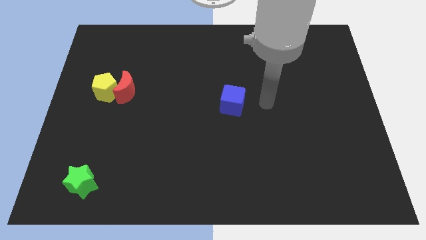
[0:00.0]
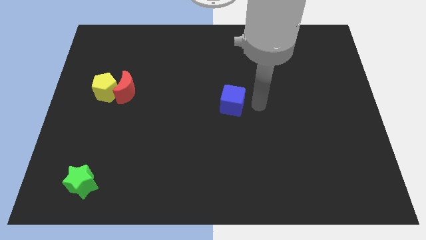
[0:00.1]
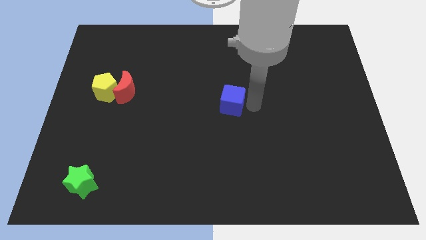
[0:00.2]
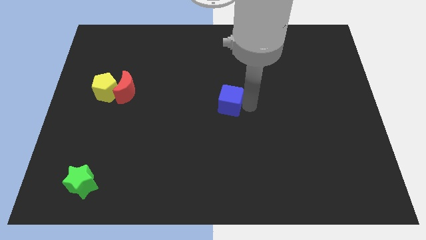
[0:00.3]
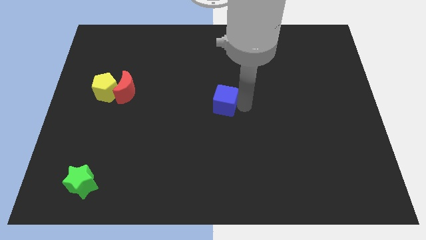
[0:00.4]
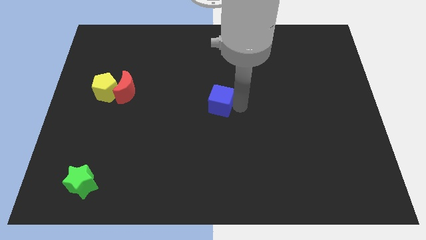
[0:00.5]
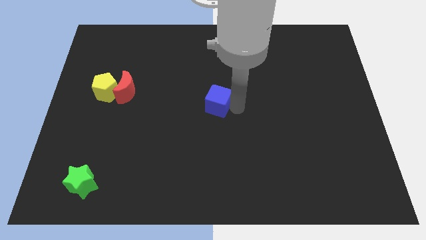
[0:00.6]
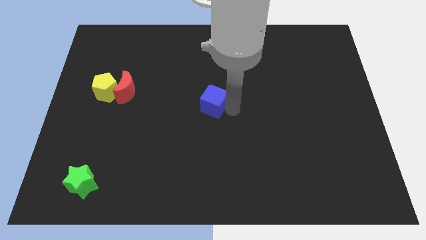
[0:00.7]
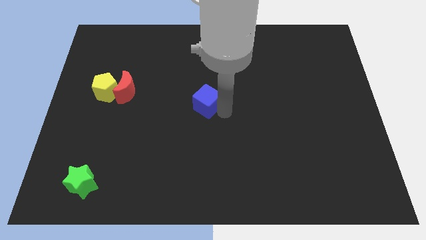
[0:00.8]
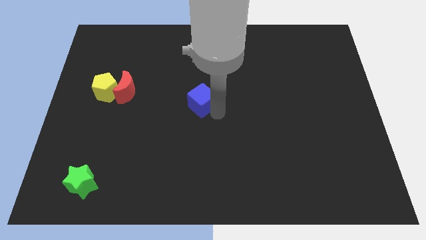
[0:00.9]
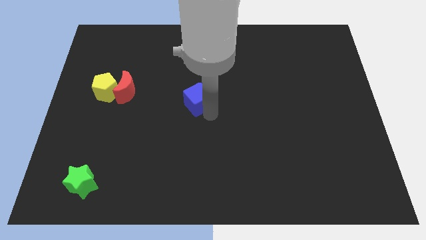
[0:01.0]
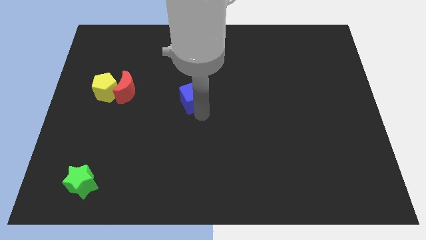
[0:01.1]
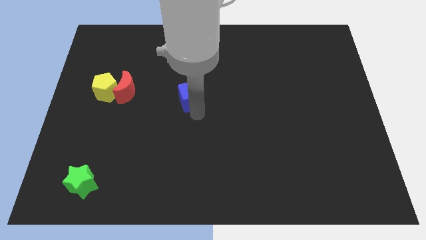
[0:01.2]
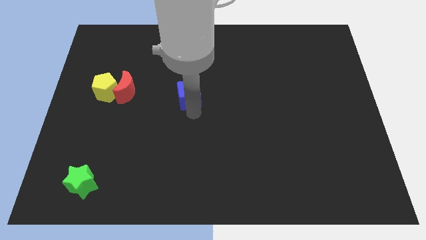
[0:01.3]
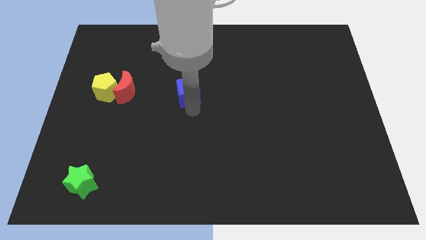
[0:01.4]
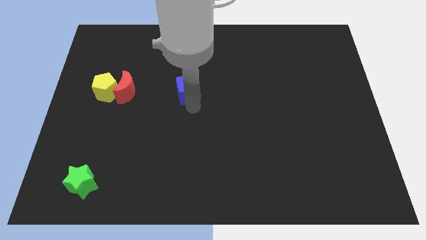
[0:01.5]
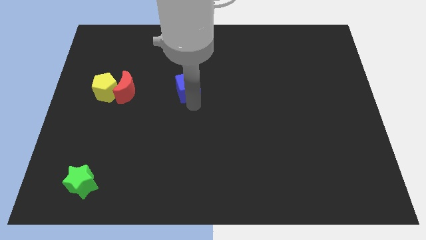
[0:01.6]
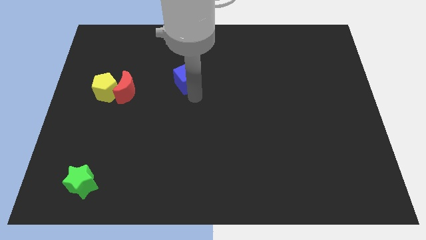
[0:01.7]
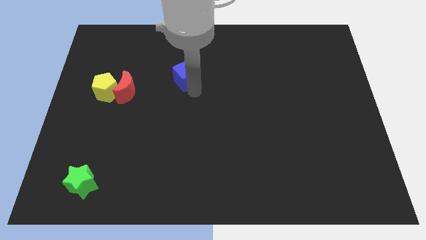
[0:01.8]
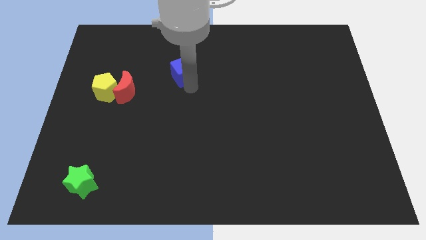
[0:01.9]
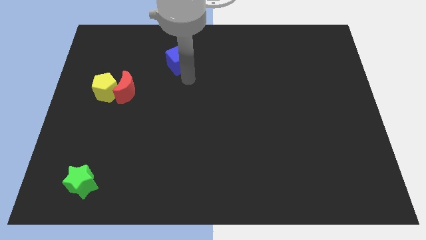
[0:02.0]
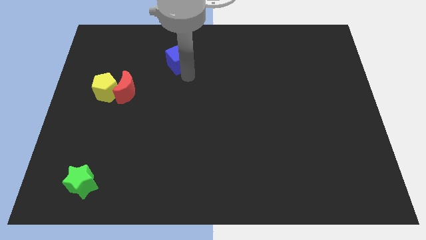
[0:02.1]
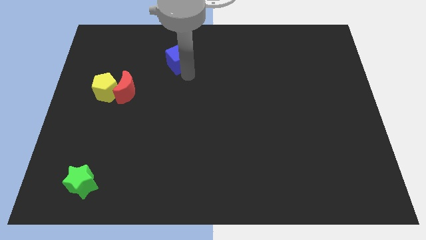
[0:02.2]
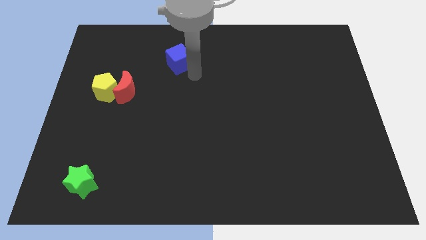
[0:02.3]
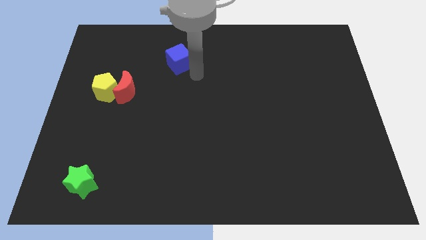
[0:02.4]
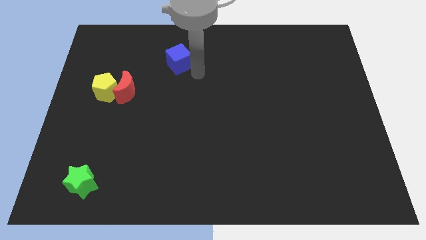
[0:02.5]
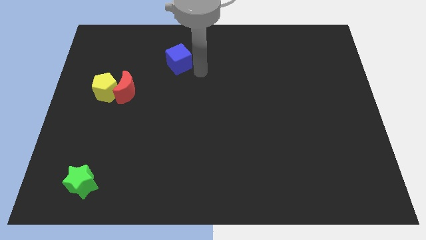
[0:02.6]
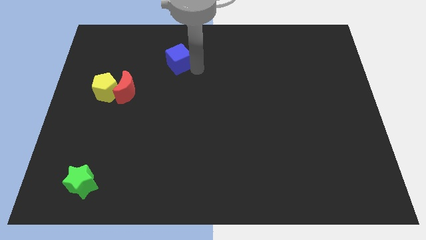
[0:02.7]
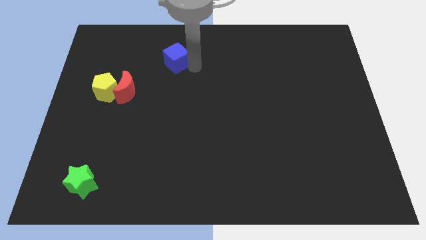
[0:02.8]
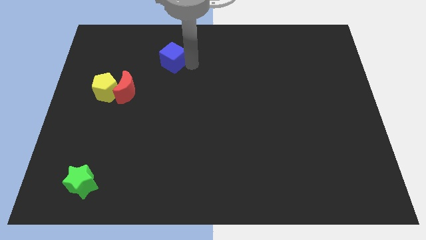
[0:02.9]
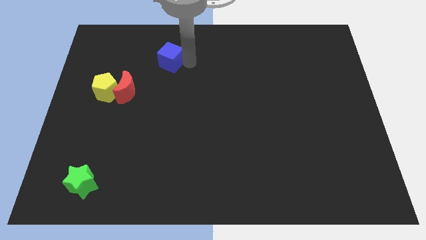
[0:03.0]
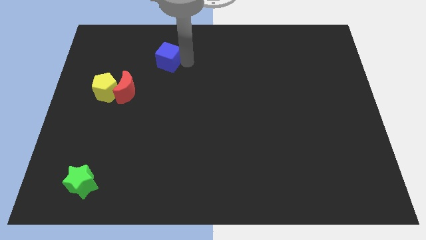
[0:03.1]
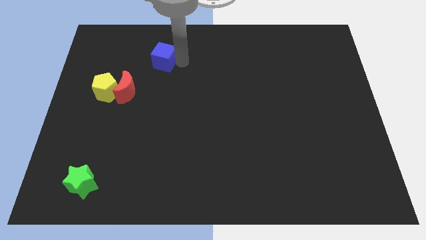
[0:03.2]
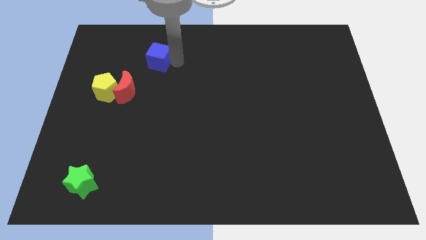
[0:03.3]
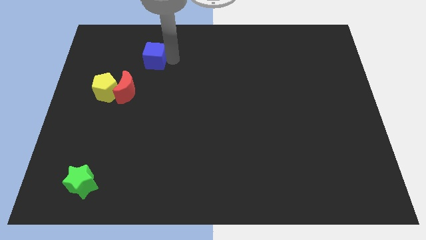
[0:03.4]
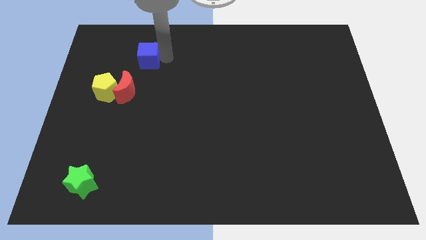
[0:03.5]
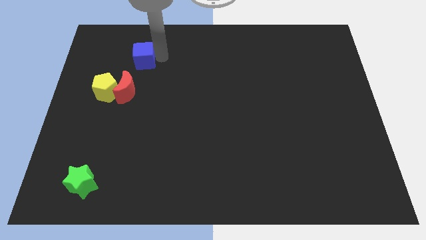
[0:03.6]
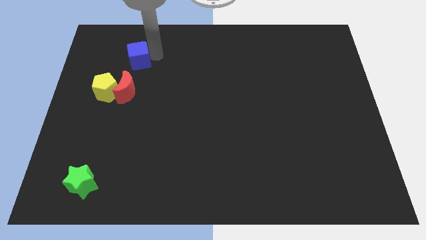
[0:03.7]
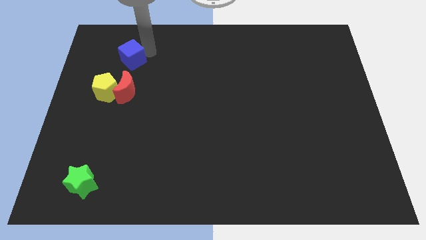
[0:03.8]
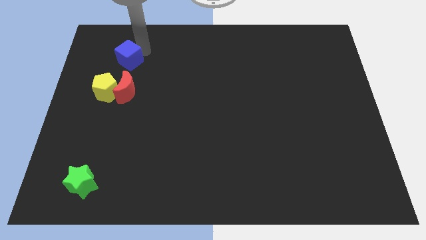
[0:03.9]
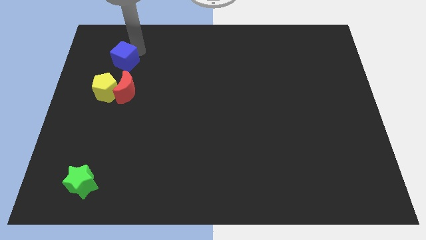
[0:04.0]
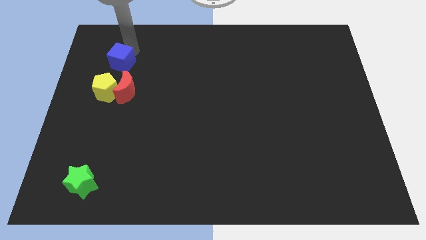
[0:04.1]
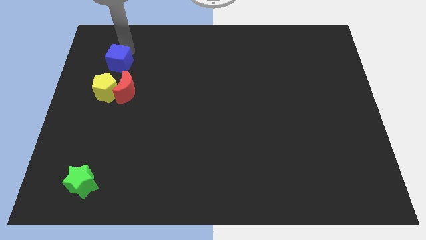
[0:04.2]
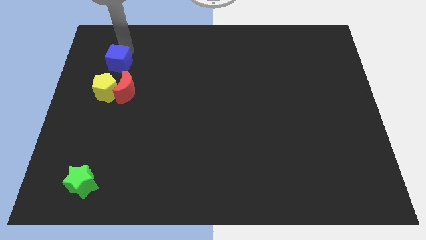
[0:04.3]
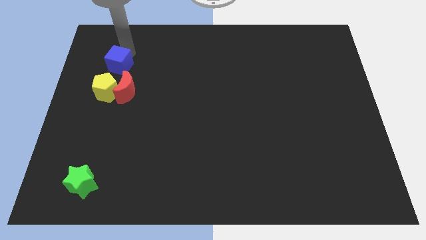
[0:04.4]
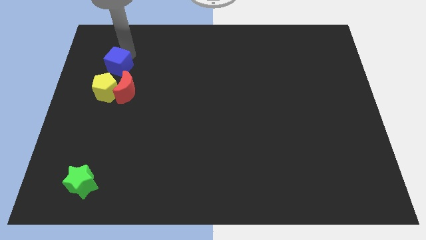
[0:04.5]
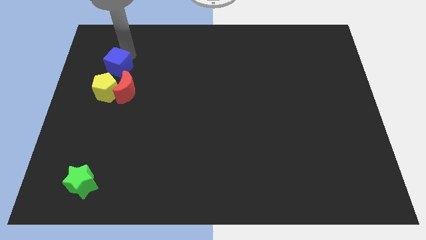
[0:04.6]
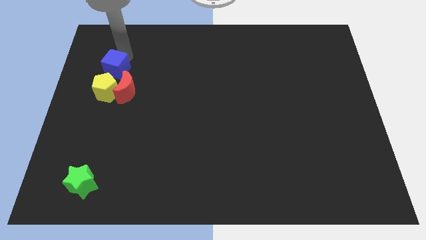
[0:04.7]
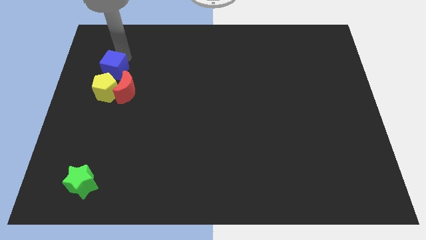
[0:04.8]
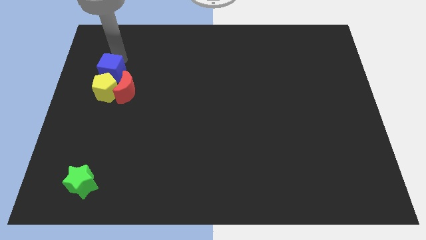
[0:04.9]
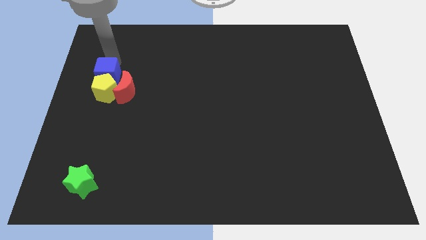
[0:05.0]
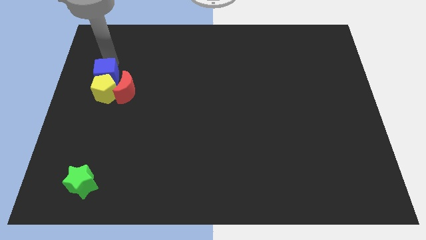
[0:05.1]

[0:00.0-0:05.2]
push the cube close to the yellow pentagon

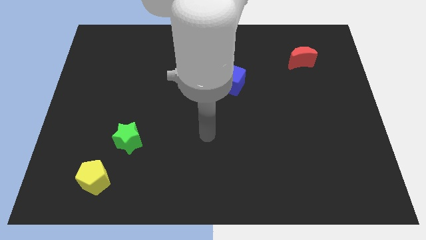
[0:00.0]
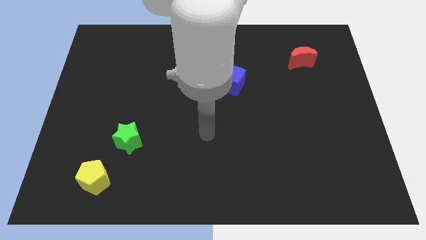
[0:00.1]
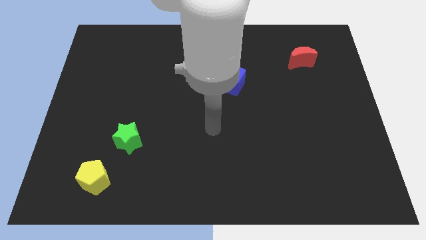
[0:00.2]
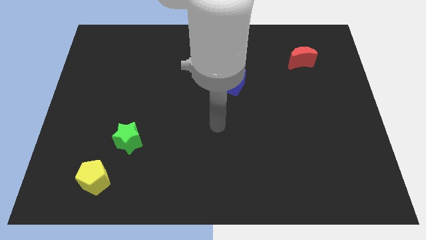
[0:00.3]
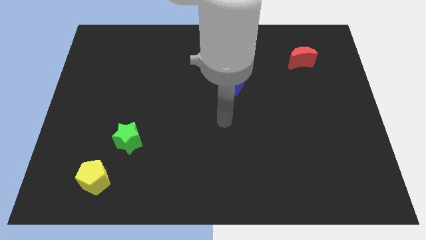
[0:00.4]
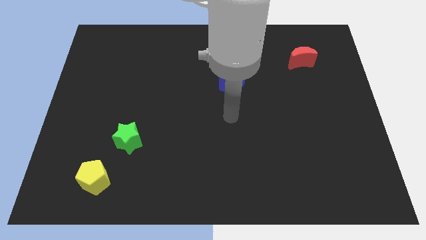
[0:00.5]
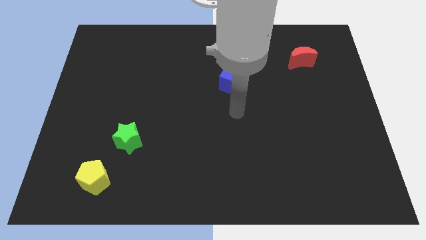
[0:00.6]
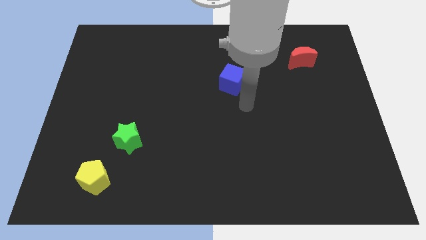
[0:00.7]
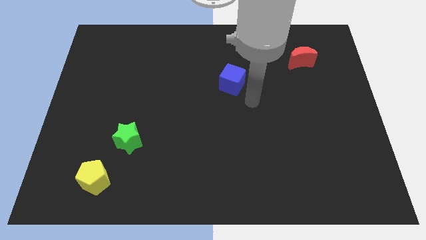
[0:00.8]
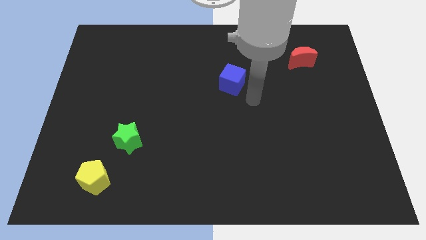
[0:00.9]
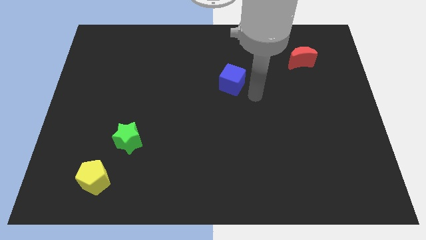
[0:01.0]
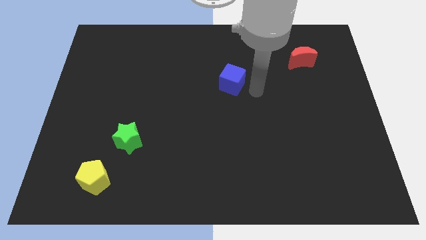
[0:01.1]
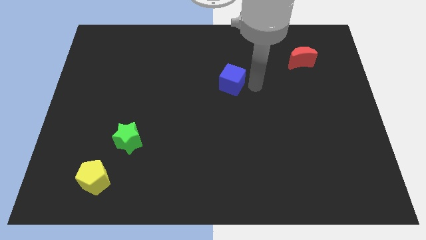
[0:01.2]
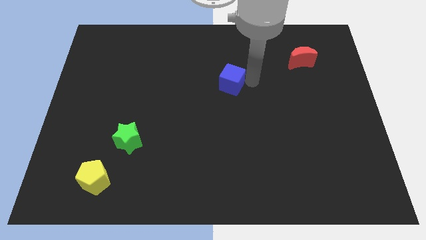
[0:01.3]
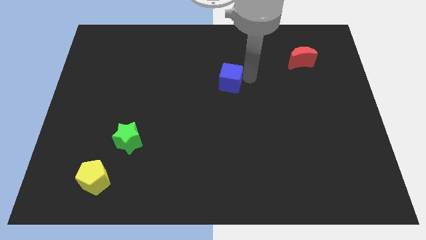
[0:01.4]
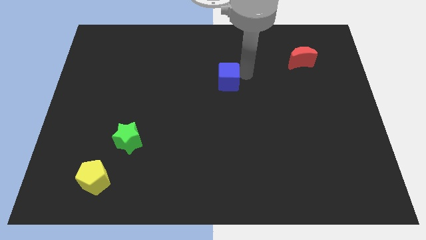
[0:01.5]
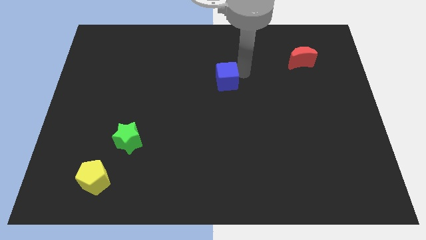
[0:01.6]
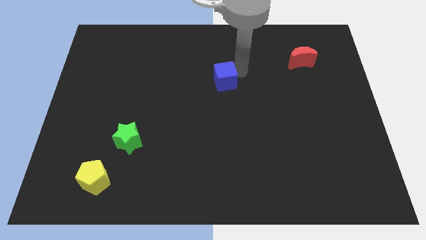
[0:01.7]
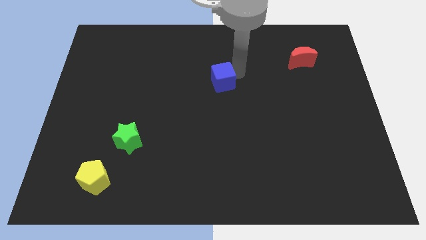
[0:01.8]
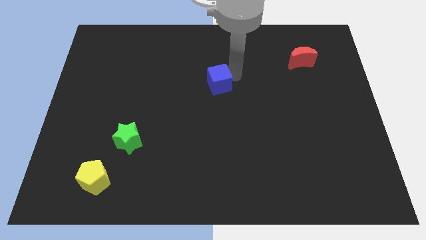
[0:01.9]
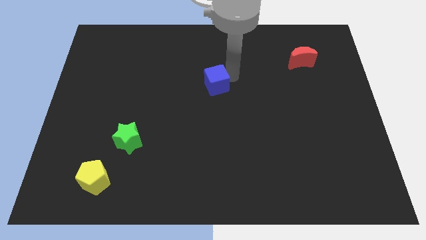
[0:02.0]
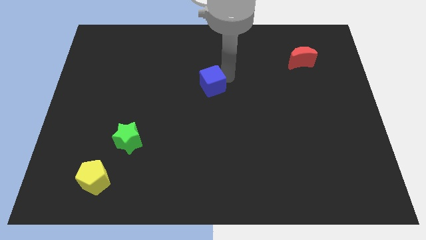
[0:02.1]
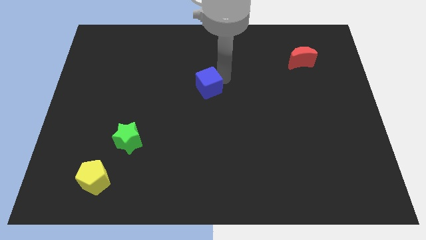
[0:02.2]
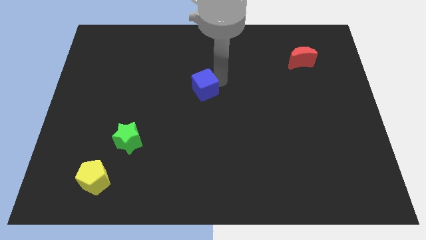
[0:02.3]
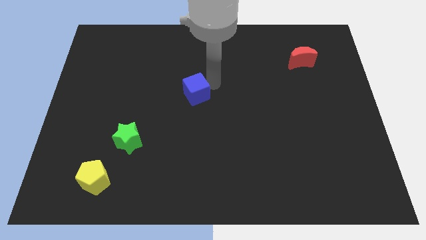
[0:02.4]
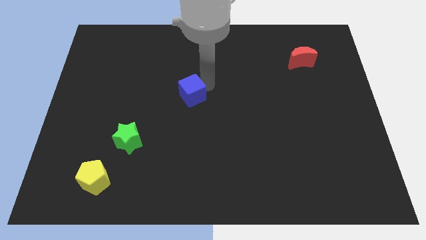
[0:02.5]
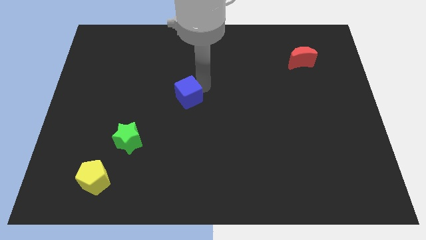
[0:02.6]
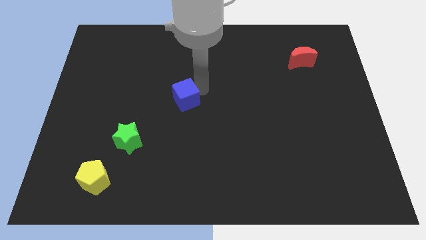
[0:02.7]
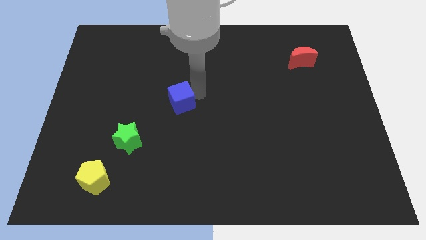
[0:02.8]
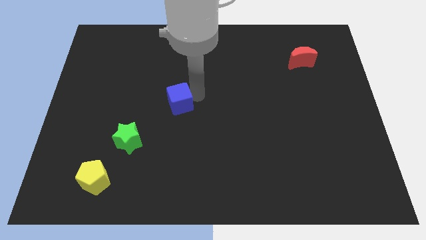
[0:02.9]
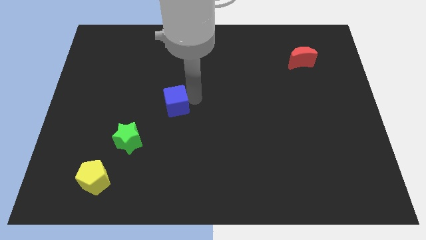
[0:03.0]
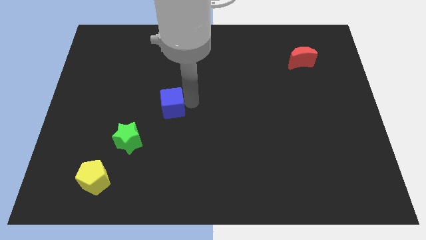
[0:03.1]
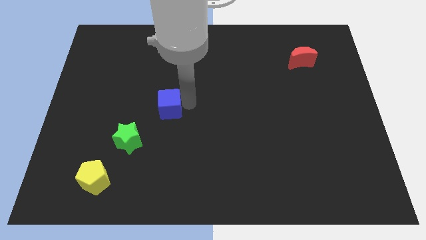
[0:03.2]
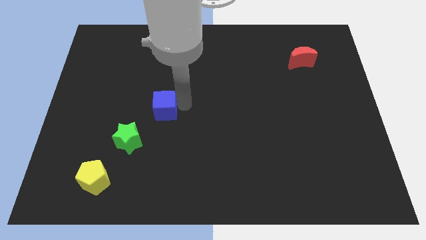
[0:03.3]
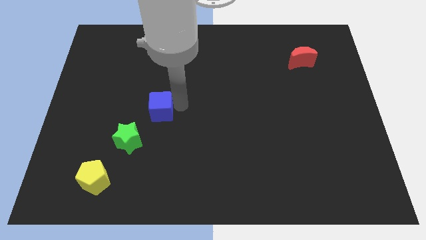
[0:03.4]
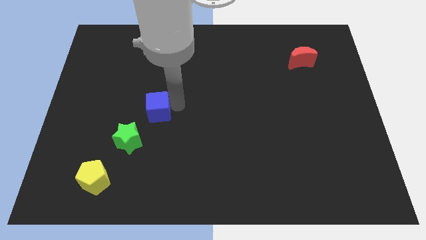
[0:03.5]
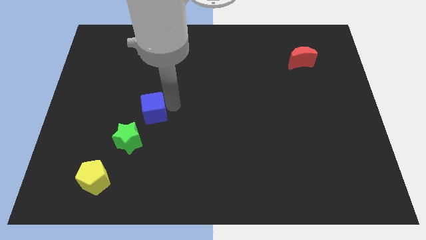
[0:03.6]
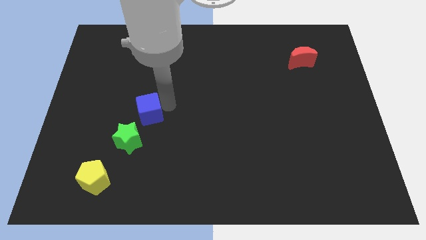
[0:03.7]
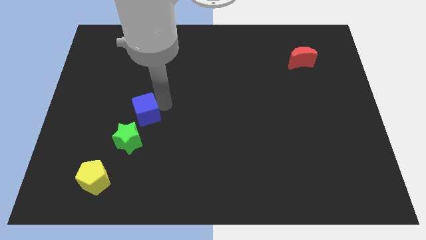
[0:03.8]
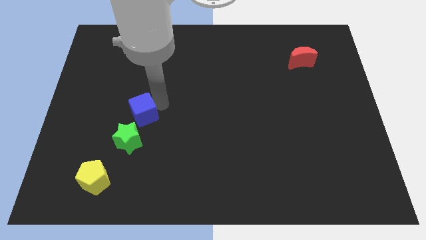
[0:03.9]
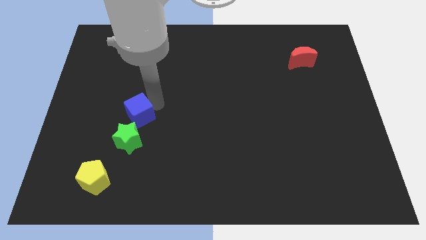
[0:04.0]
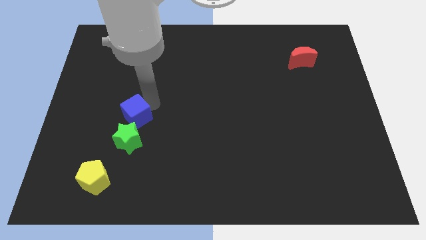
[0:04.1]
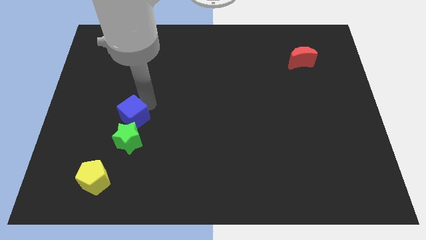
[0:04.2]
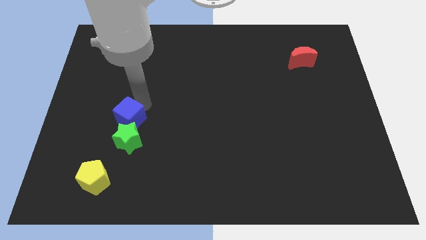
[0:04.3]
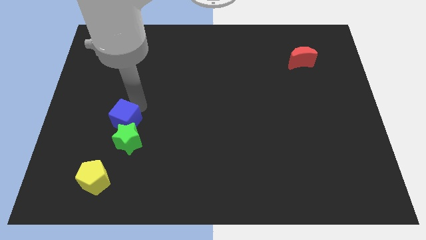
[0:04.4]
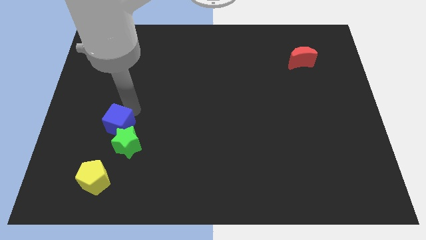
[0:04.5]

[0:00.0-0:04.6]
push the blue block towards the green star
